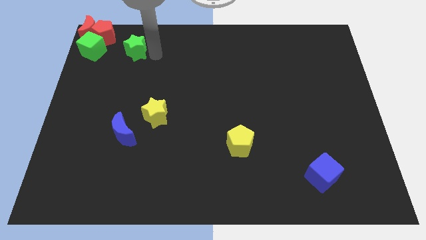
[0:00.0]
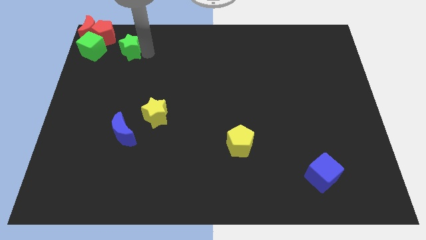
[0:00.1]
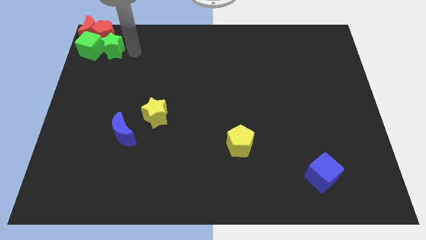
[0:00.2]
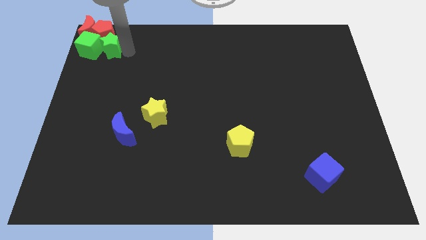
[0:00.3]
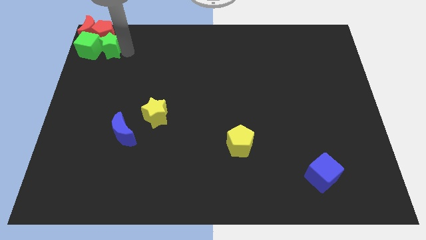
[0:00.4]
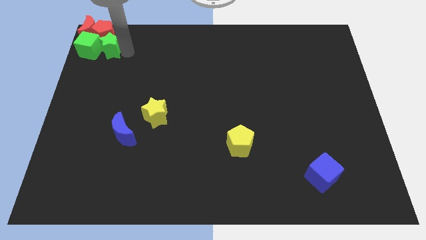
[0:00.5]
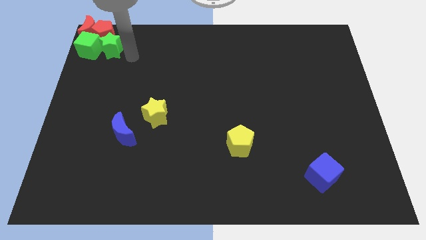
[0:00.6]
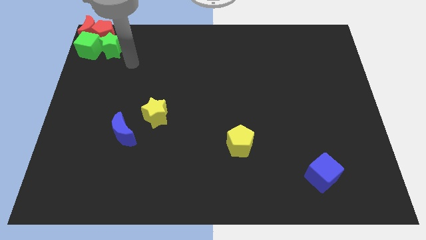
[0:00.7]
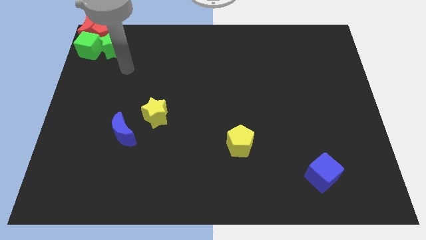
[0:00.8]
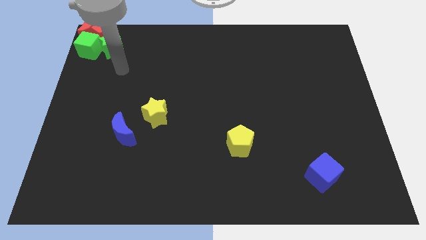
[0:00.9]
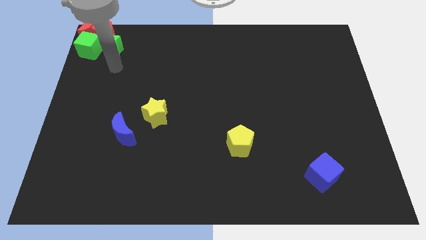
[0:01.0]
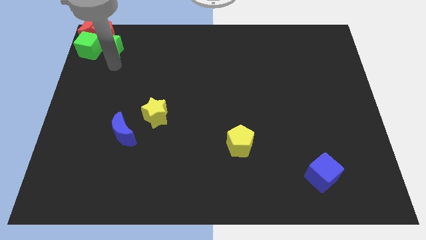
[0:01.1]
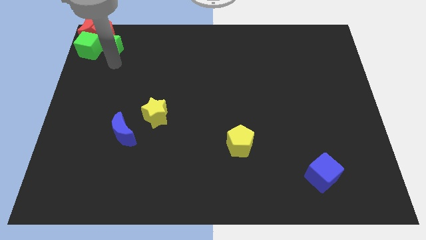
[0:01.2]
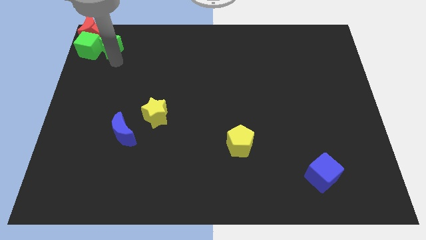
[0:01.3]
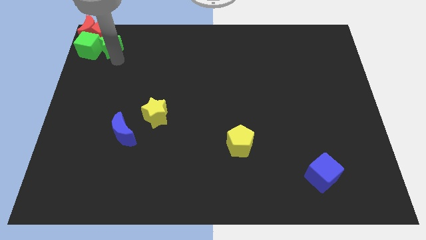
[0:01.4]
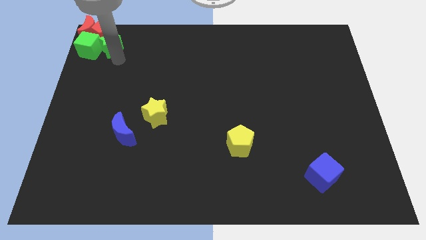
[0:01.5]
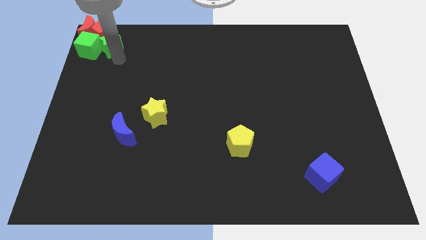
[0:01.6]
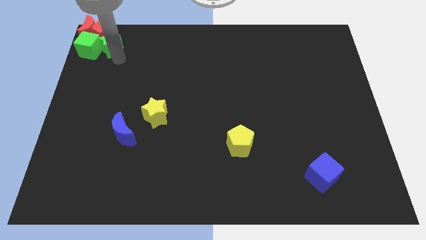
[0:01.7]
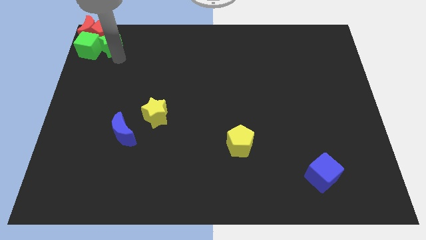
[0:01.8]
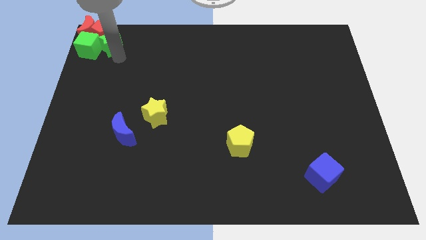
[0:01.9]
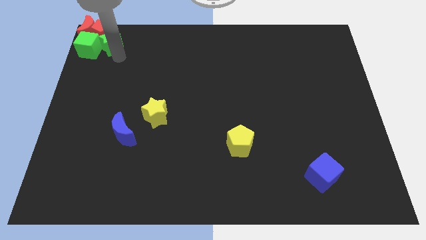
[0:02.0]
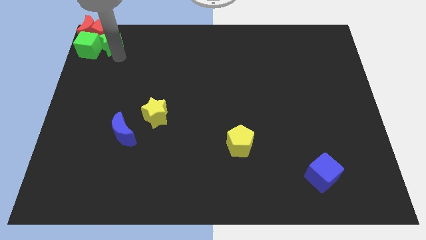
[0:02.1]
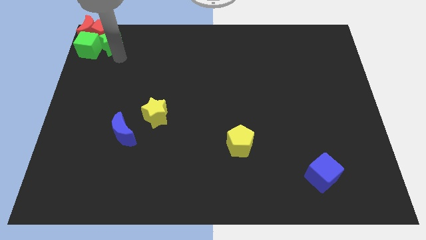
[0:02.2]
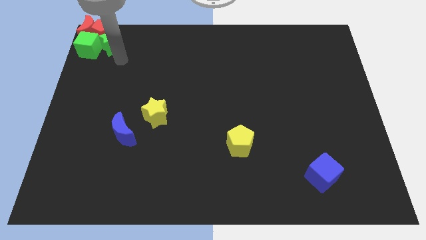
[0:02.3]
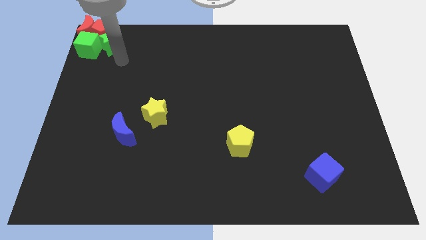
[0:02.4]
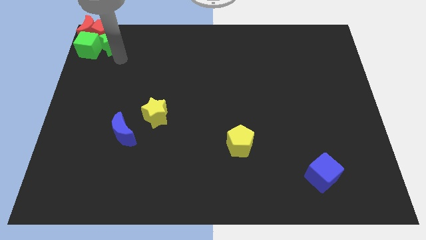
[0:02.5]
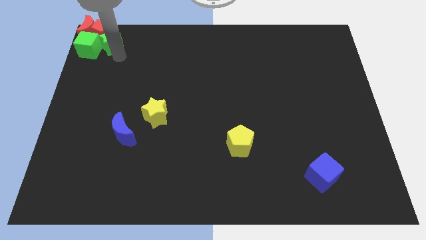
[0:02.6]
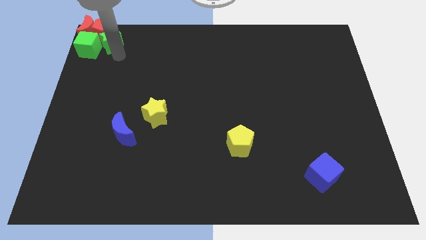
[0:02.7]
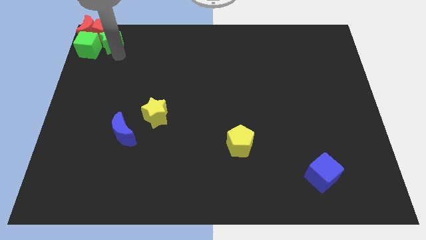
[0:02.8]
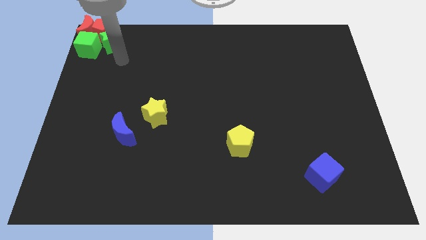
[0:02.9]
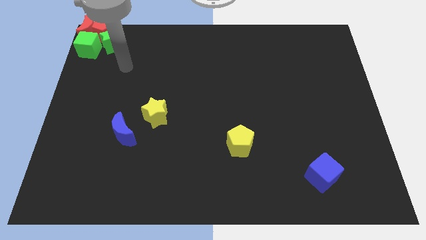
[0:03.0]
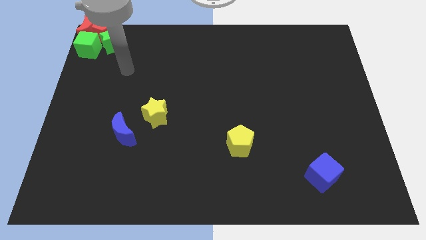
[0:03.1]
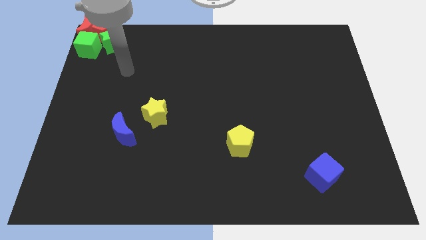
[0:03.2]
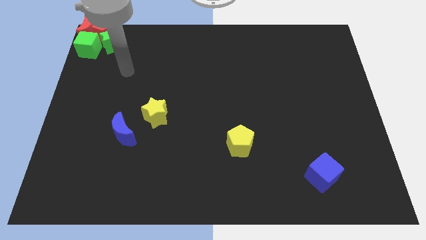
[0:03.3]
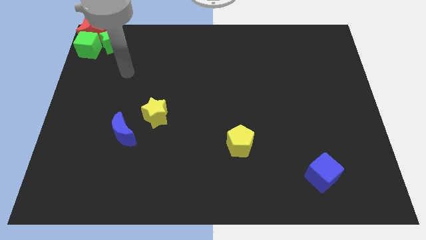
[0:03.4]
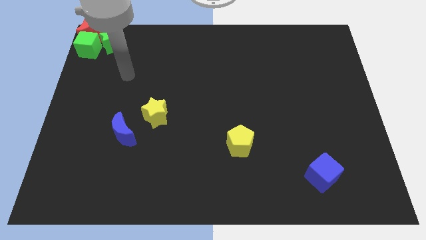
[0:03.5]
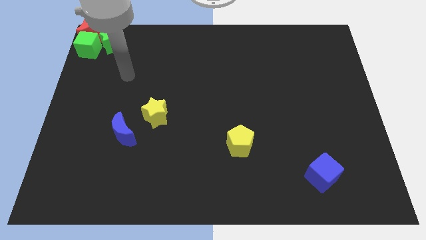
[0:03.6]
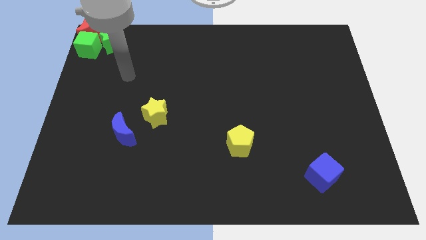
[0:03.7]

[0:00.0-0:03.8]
move the green star into the green cube

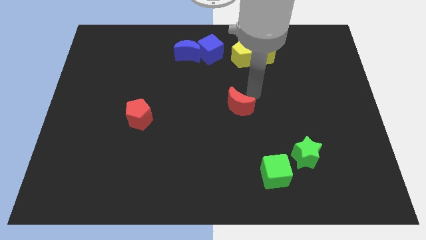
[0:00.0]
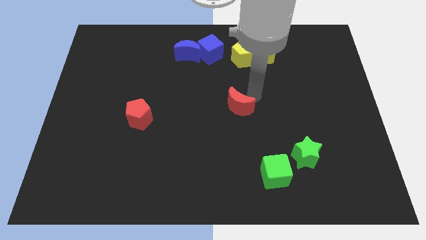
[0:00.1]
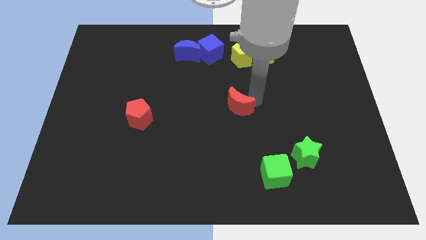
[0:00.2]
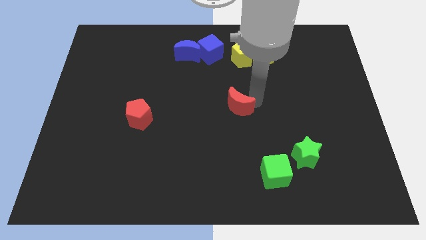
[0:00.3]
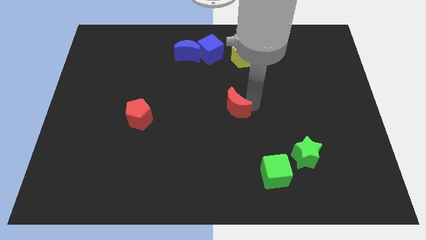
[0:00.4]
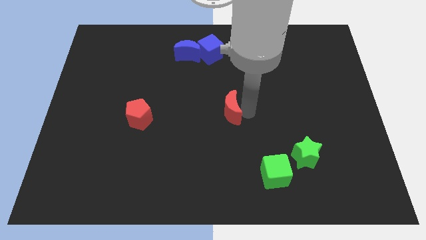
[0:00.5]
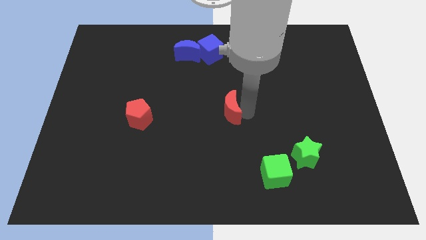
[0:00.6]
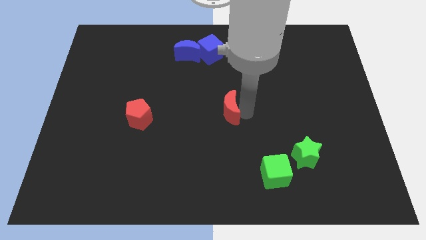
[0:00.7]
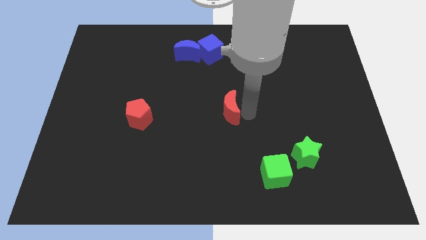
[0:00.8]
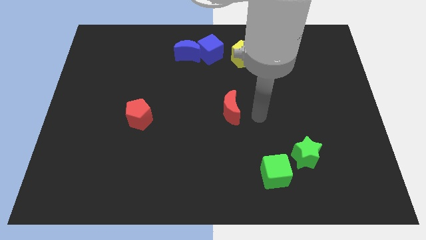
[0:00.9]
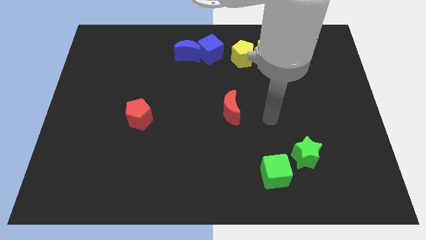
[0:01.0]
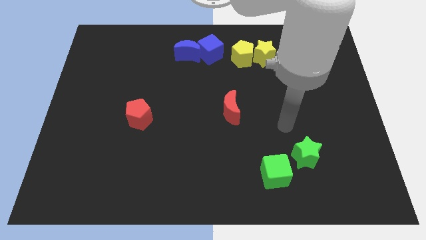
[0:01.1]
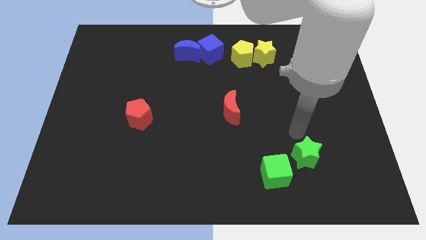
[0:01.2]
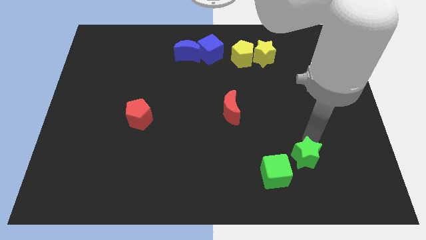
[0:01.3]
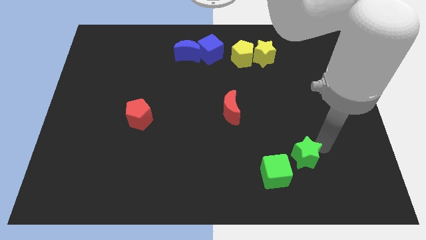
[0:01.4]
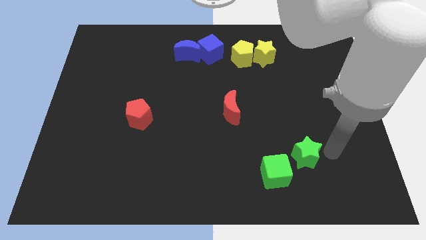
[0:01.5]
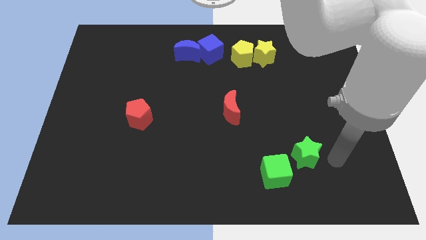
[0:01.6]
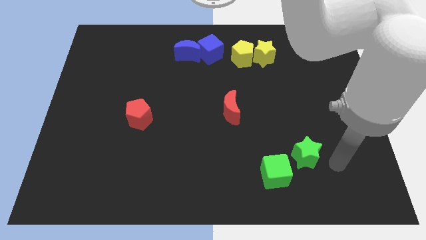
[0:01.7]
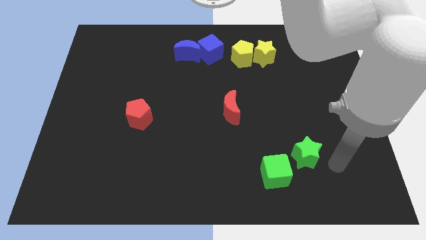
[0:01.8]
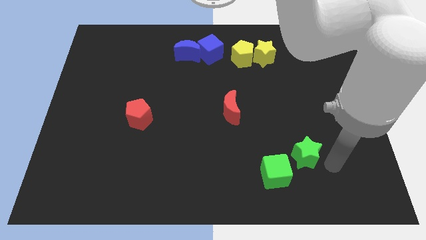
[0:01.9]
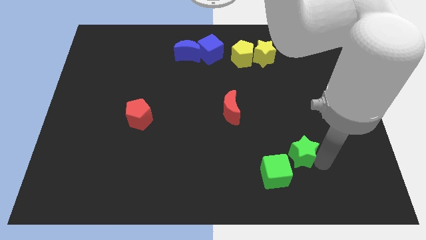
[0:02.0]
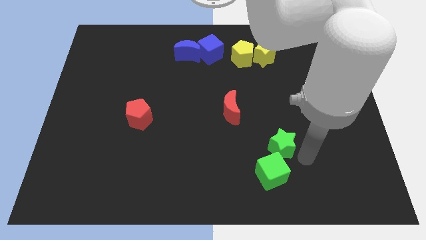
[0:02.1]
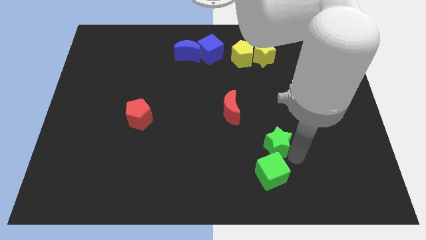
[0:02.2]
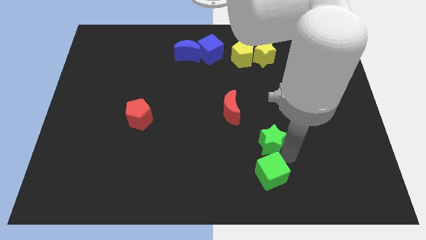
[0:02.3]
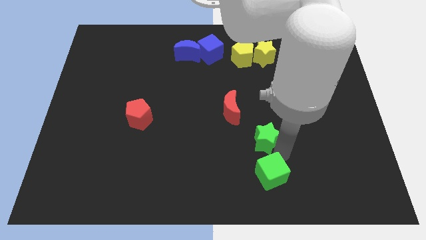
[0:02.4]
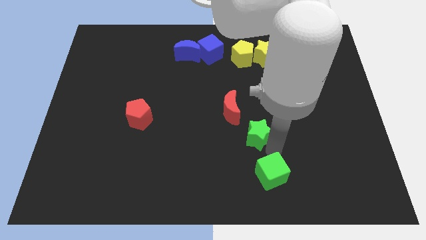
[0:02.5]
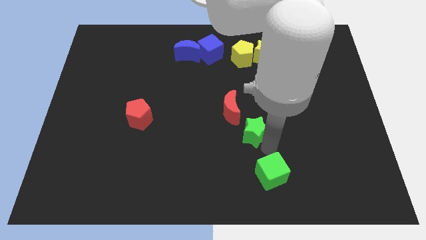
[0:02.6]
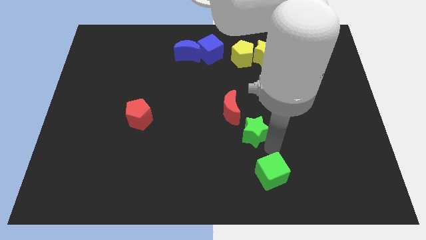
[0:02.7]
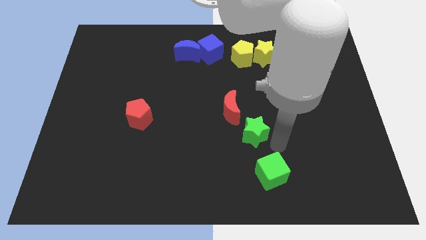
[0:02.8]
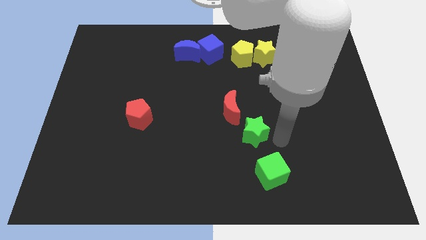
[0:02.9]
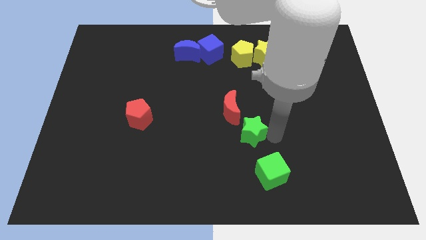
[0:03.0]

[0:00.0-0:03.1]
place the green star in between the red moon and green cube

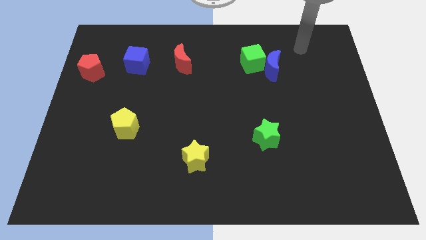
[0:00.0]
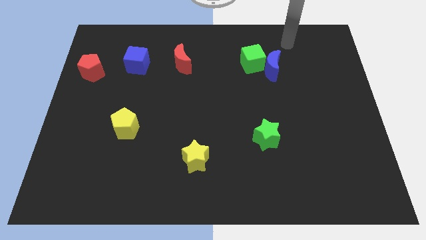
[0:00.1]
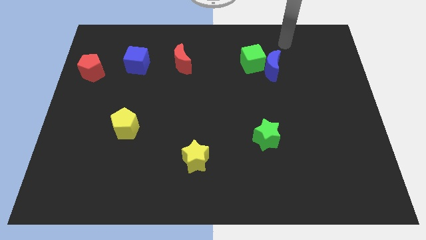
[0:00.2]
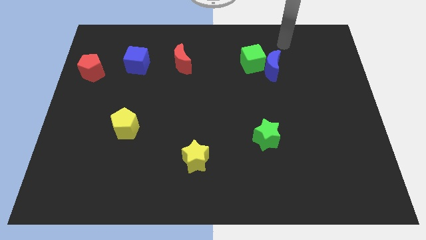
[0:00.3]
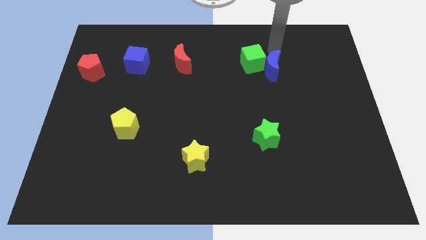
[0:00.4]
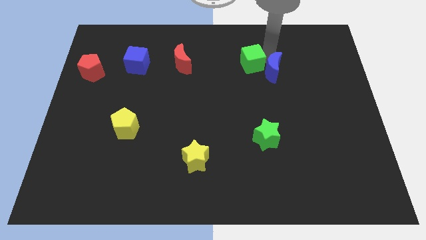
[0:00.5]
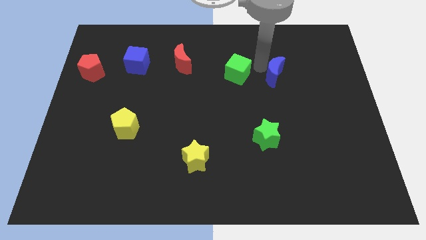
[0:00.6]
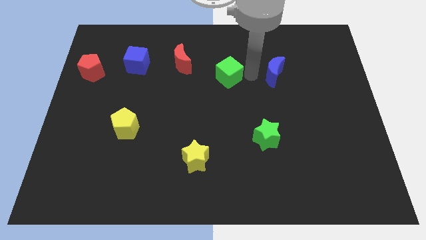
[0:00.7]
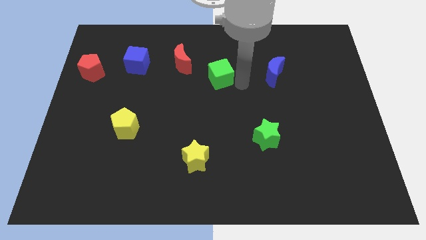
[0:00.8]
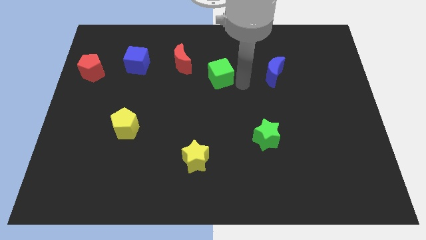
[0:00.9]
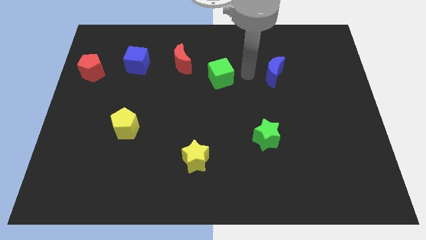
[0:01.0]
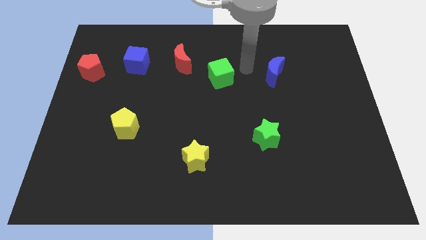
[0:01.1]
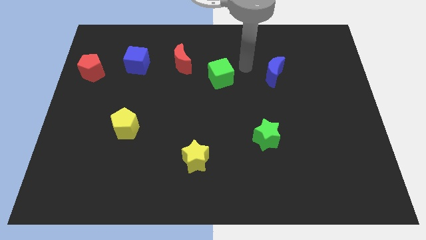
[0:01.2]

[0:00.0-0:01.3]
separate green cube and the blue moon

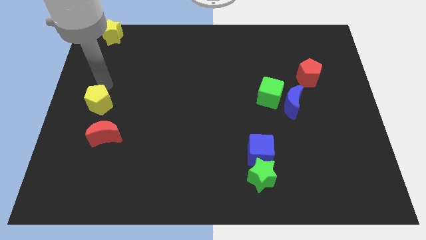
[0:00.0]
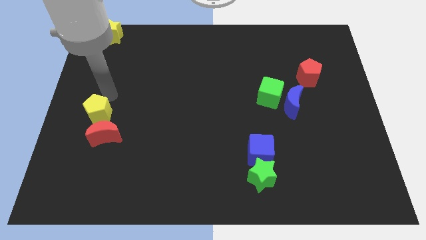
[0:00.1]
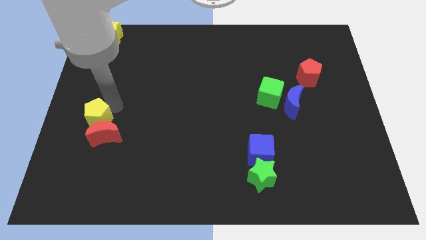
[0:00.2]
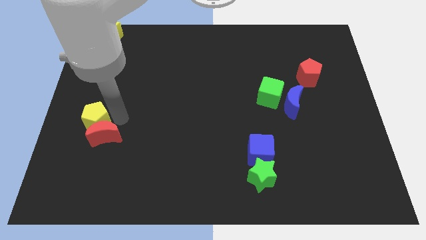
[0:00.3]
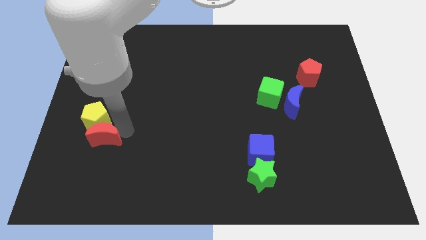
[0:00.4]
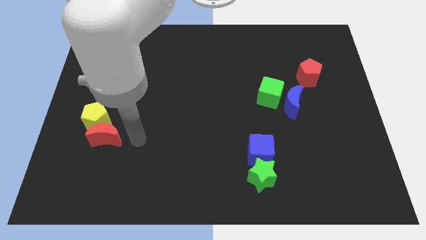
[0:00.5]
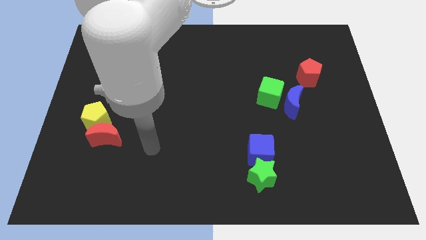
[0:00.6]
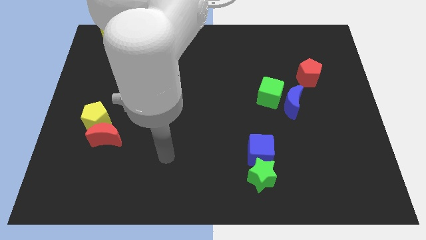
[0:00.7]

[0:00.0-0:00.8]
push the yellow pentagon into the red moon

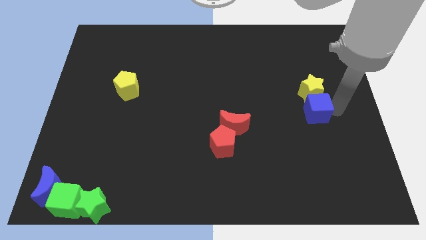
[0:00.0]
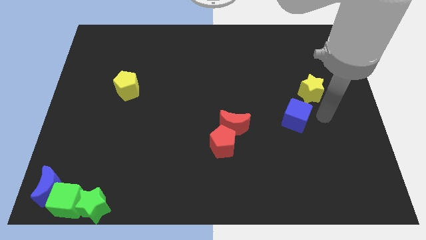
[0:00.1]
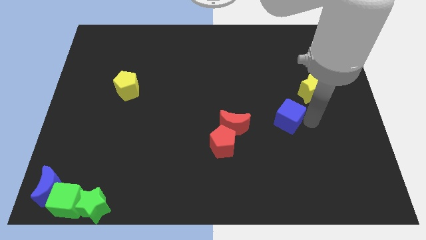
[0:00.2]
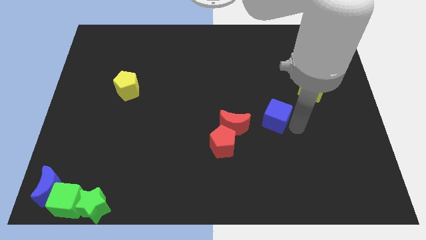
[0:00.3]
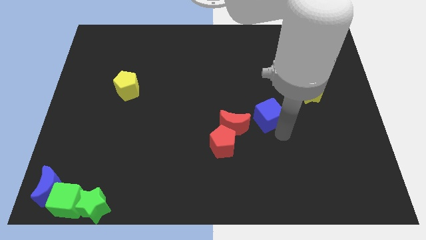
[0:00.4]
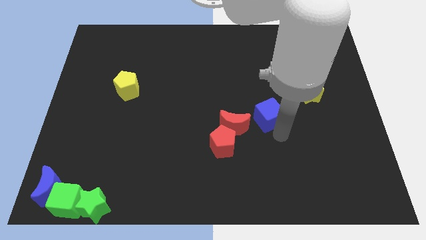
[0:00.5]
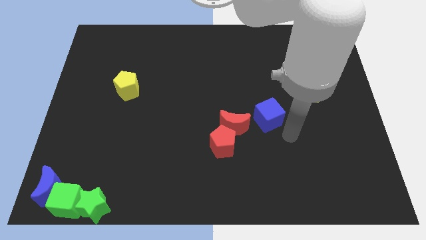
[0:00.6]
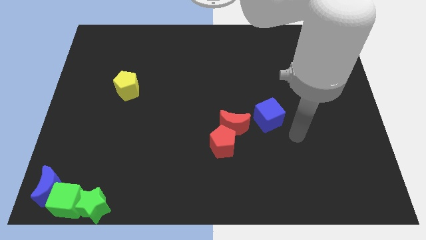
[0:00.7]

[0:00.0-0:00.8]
separate the blue cube from yellow star
